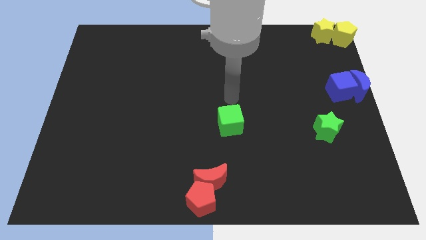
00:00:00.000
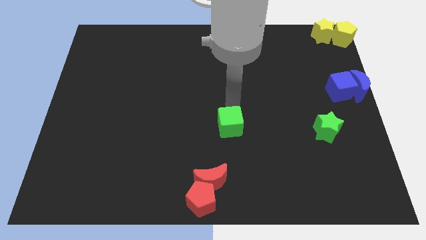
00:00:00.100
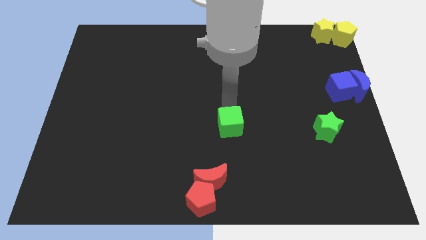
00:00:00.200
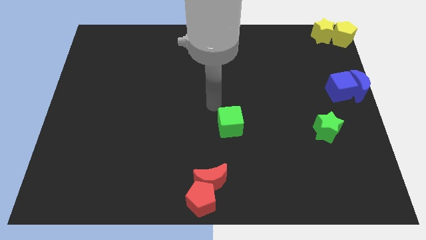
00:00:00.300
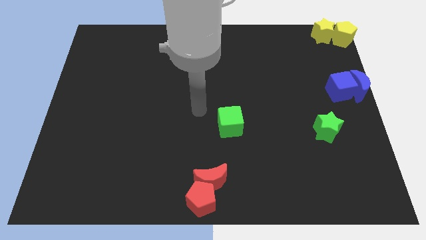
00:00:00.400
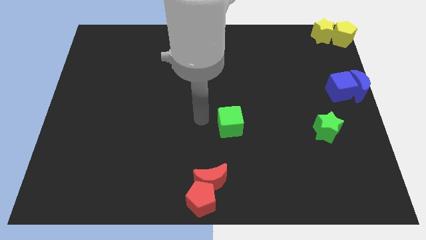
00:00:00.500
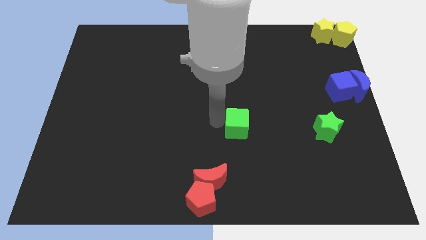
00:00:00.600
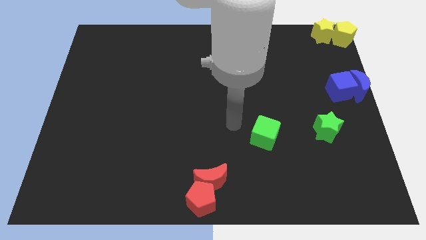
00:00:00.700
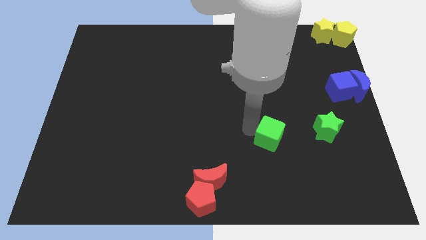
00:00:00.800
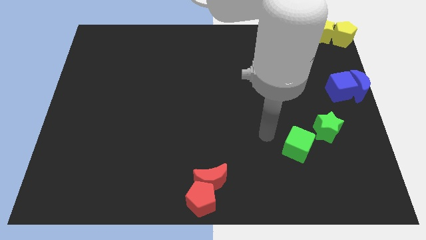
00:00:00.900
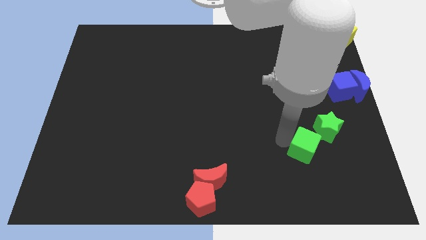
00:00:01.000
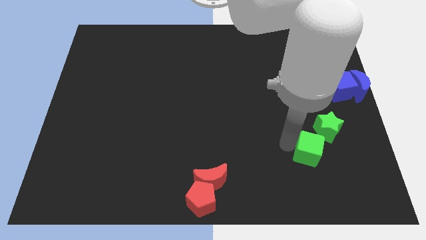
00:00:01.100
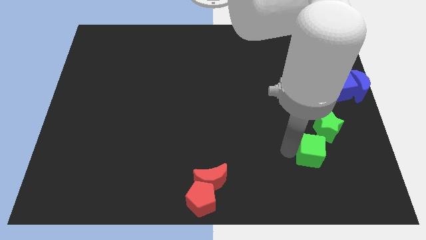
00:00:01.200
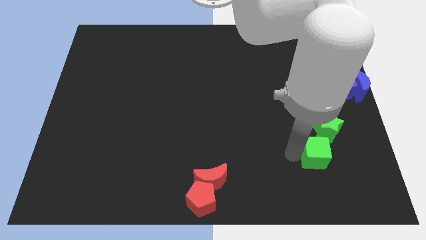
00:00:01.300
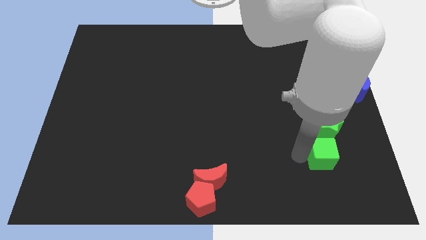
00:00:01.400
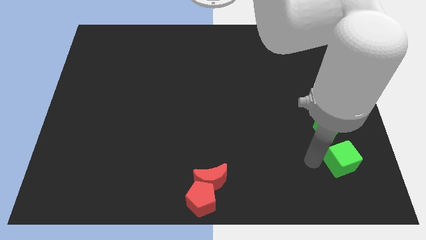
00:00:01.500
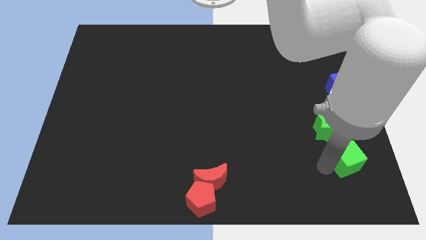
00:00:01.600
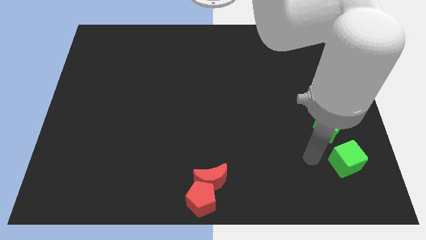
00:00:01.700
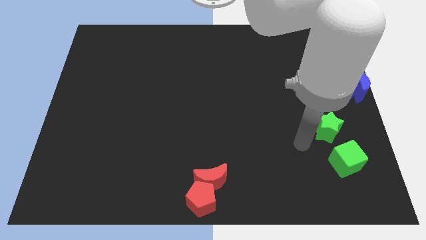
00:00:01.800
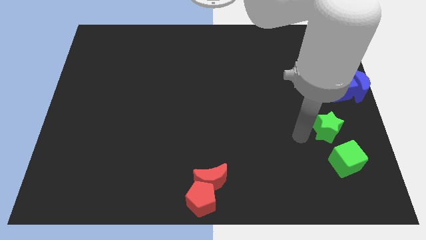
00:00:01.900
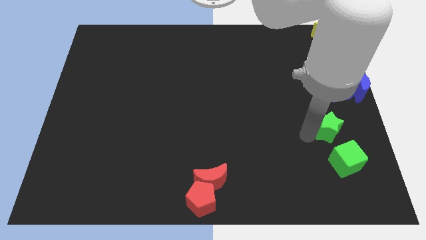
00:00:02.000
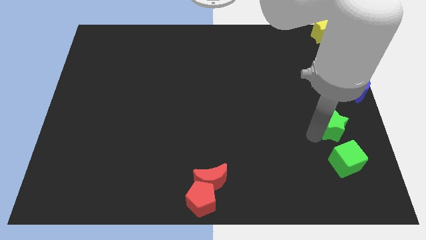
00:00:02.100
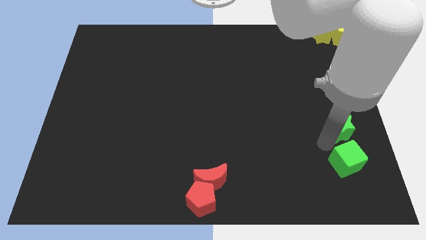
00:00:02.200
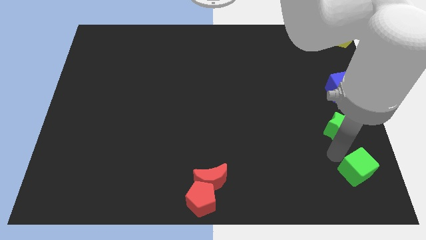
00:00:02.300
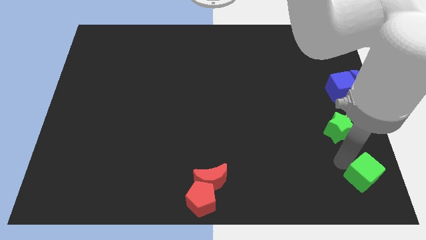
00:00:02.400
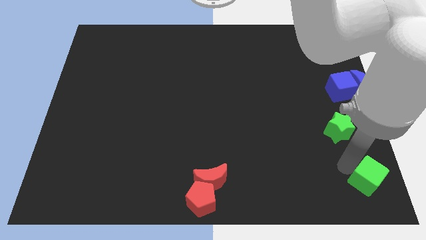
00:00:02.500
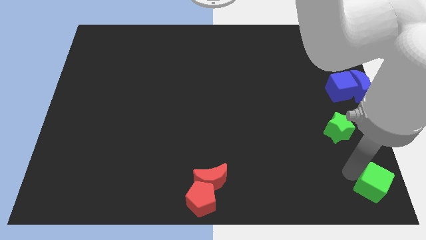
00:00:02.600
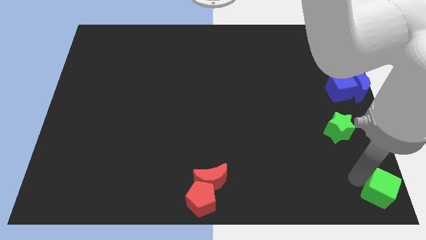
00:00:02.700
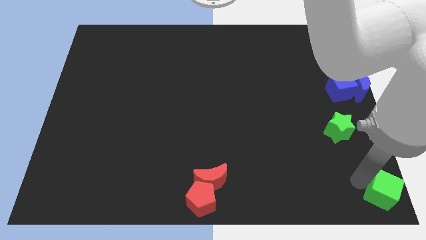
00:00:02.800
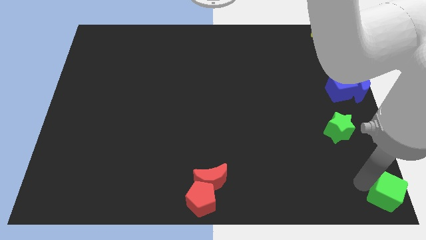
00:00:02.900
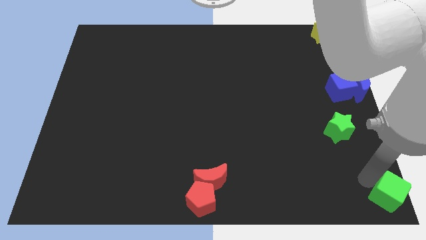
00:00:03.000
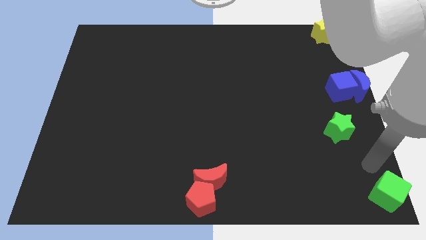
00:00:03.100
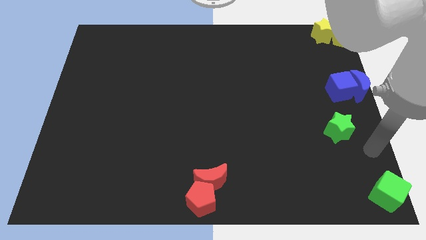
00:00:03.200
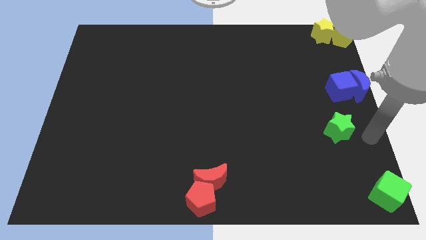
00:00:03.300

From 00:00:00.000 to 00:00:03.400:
push the green cube to the bottom right corner of the board

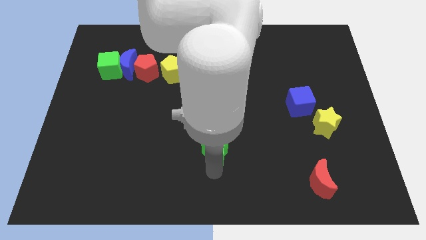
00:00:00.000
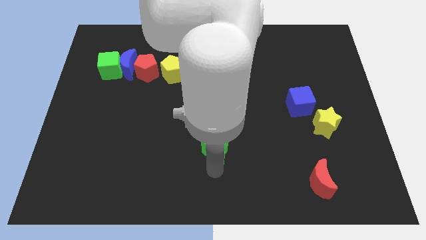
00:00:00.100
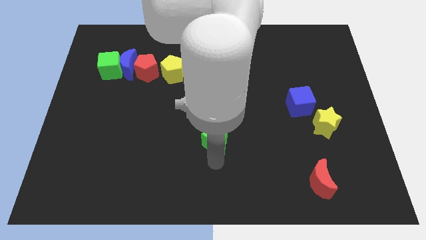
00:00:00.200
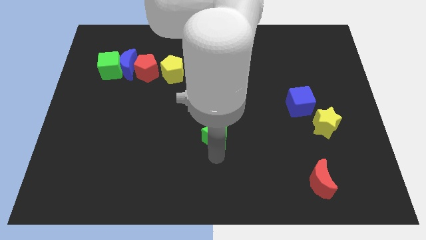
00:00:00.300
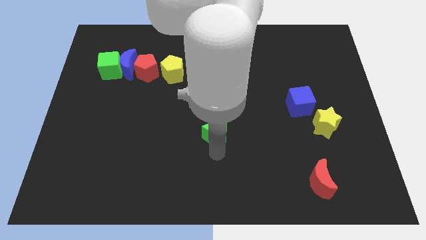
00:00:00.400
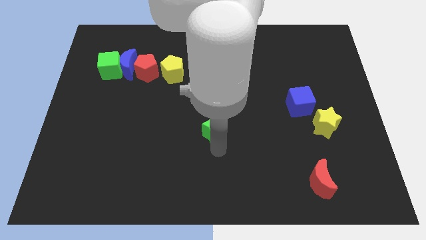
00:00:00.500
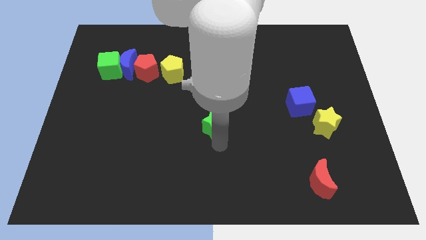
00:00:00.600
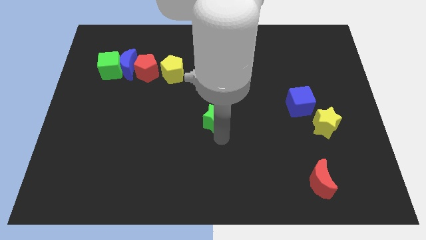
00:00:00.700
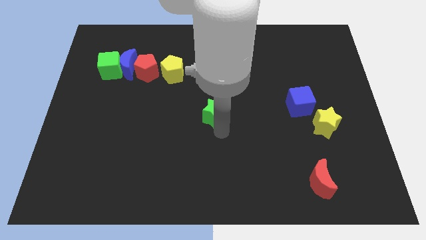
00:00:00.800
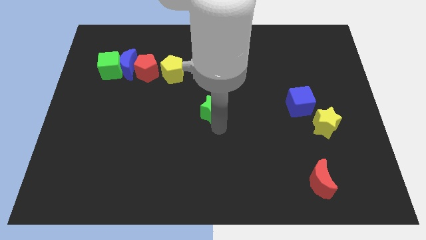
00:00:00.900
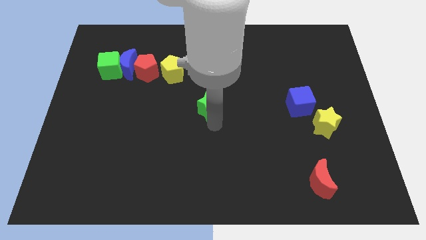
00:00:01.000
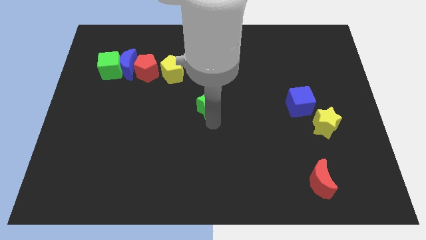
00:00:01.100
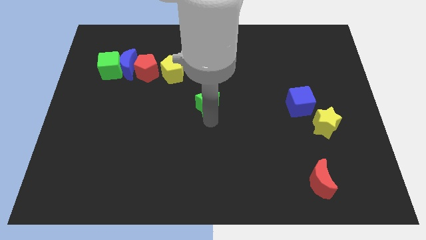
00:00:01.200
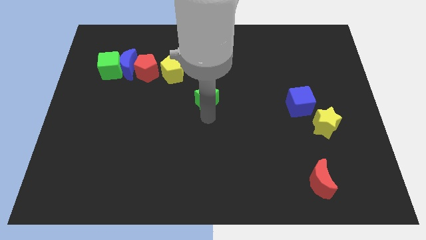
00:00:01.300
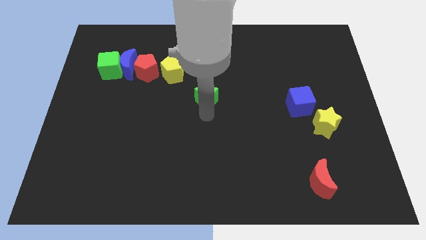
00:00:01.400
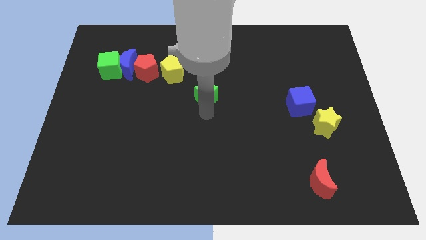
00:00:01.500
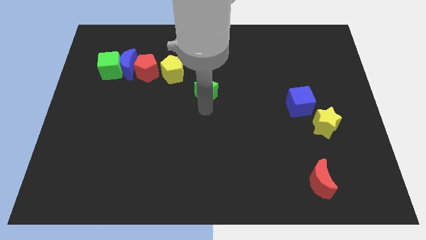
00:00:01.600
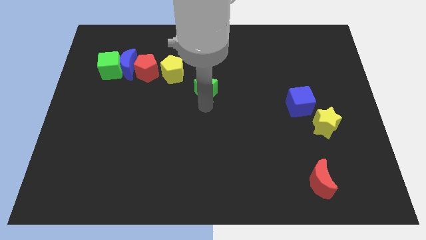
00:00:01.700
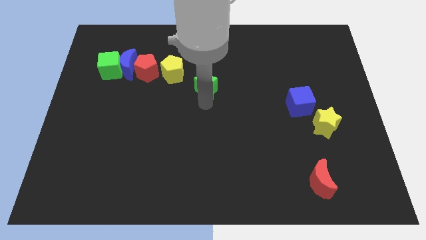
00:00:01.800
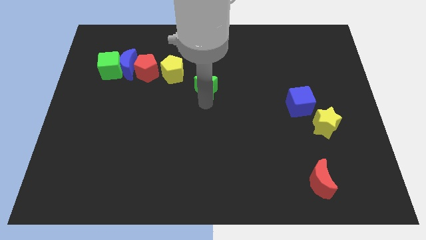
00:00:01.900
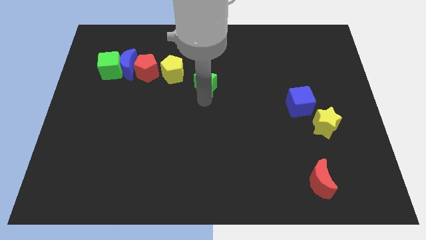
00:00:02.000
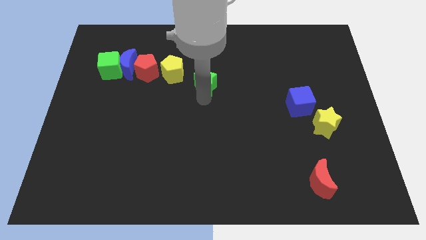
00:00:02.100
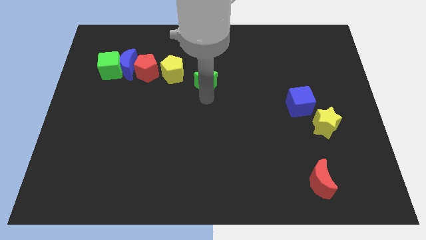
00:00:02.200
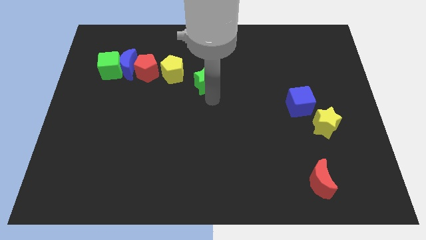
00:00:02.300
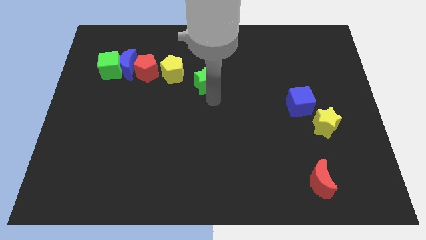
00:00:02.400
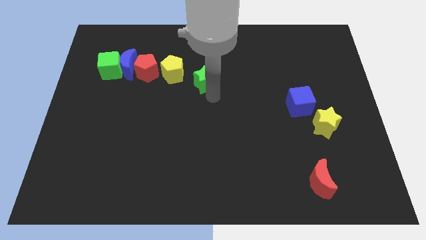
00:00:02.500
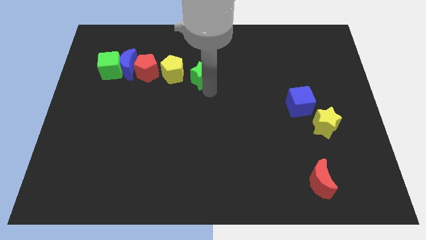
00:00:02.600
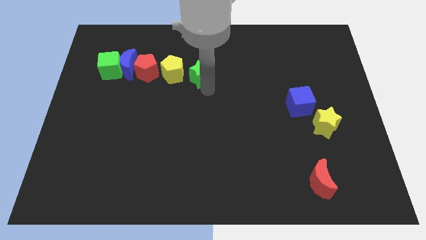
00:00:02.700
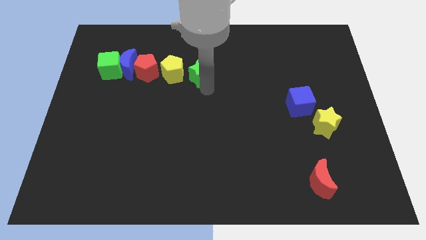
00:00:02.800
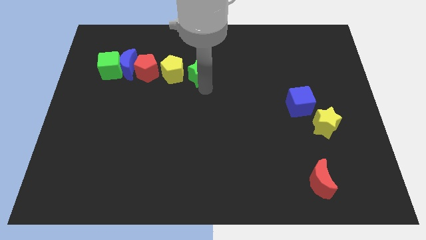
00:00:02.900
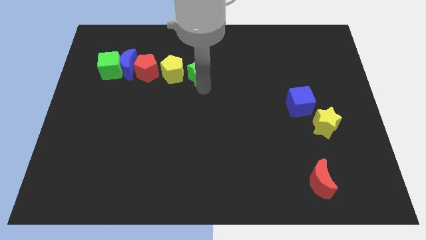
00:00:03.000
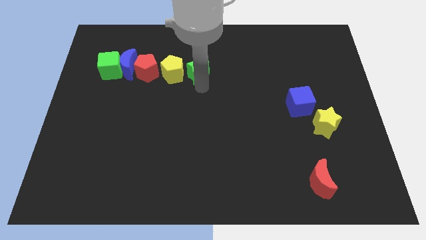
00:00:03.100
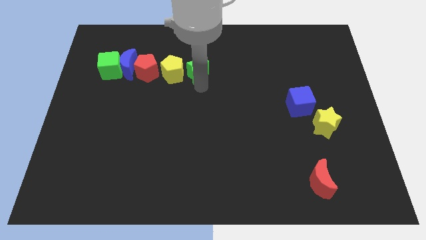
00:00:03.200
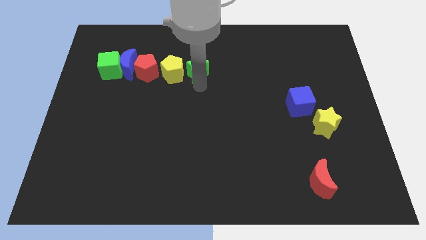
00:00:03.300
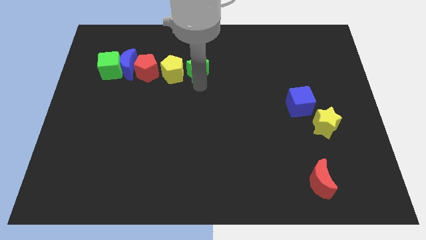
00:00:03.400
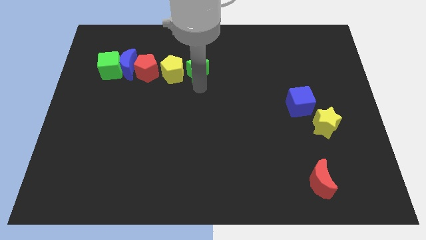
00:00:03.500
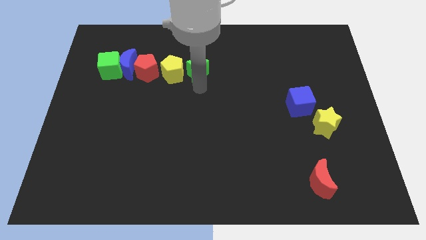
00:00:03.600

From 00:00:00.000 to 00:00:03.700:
move the green star to the right of the yellow pentagon

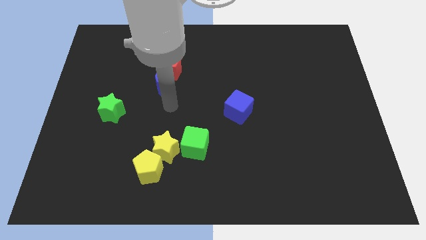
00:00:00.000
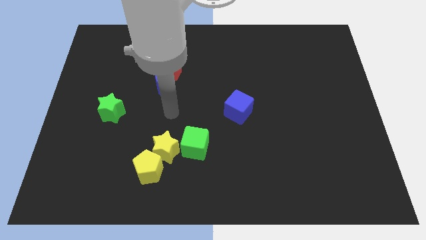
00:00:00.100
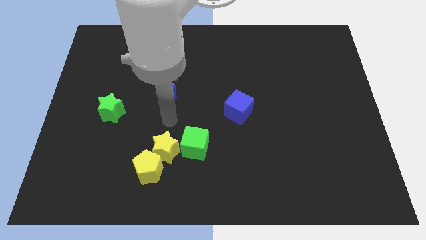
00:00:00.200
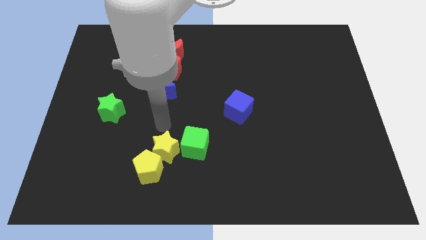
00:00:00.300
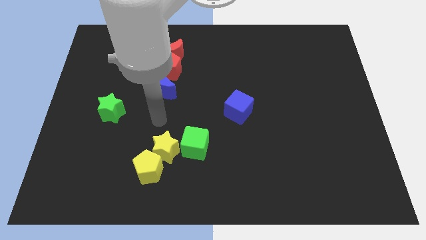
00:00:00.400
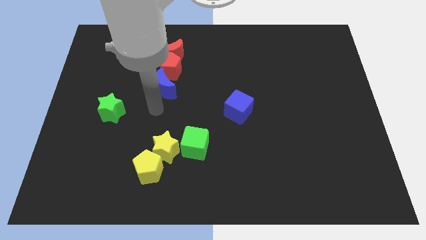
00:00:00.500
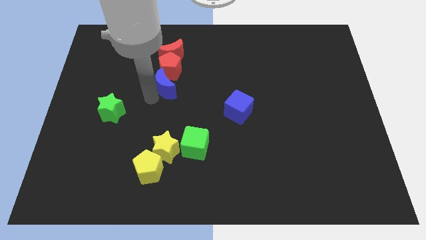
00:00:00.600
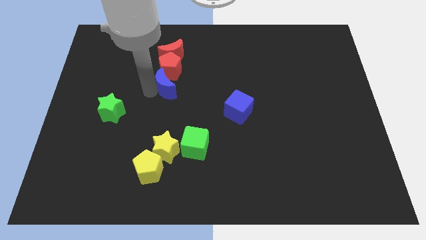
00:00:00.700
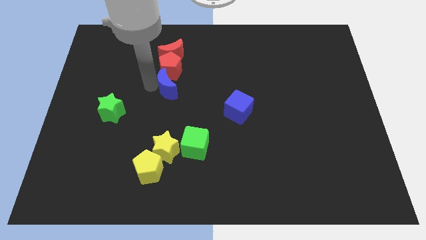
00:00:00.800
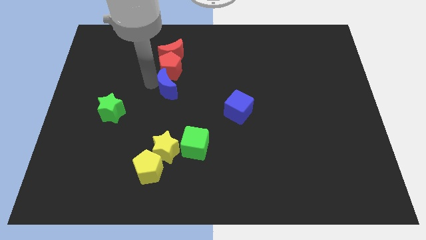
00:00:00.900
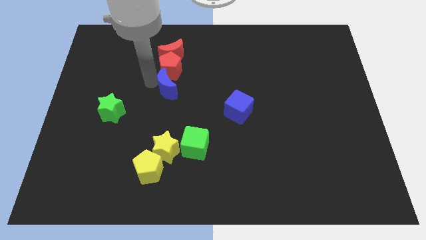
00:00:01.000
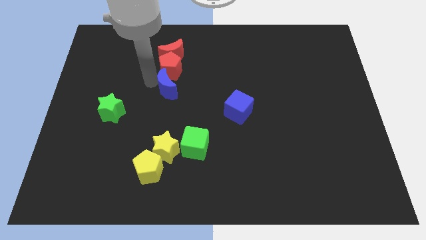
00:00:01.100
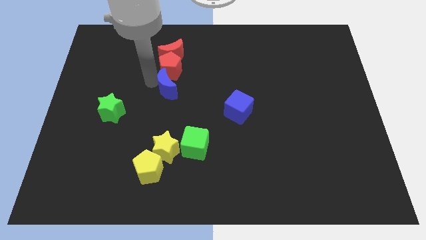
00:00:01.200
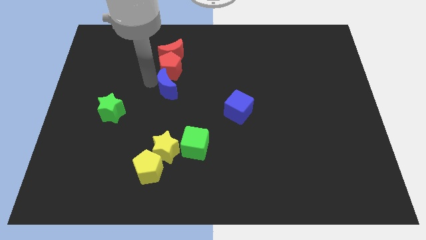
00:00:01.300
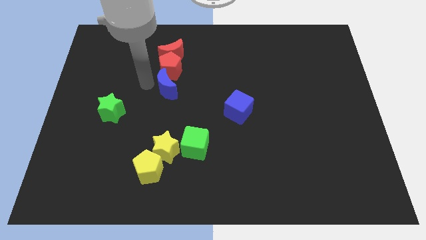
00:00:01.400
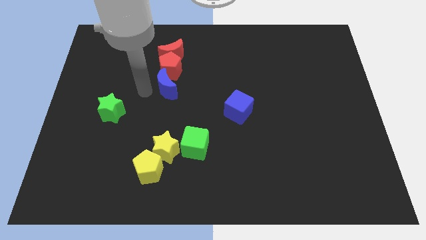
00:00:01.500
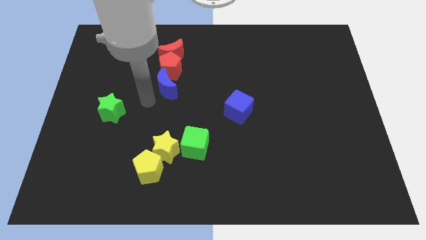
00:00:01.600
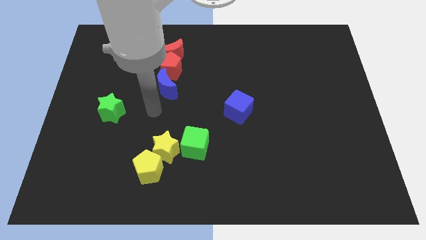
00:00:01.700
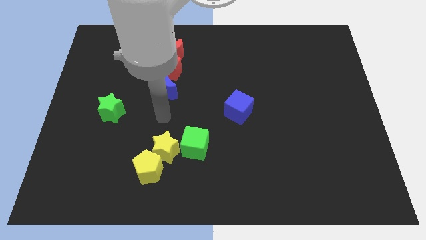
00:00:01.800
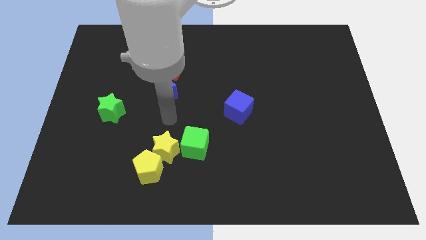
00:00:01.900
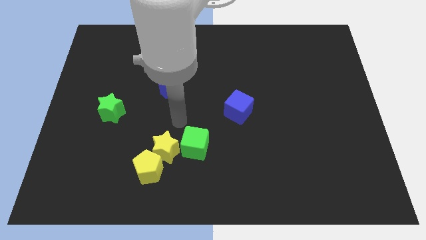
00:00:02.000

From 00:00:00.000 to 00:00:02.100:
slightly touch the blue moon
